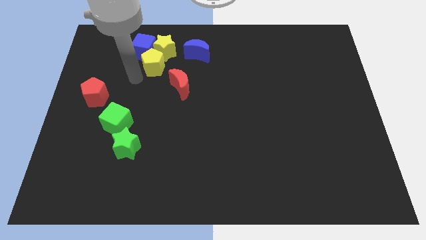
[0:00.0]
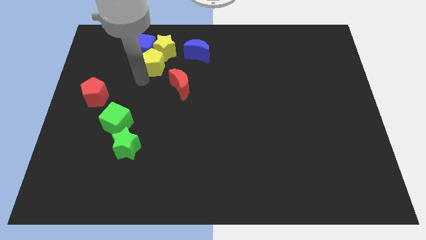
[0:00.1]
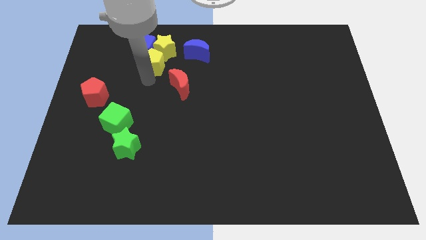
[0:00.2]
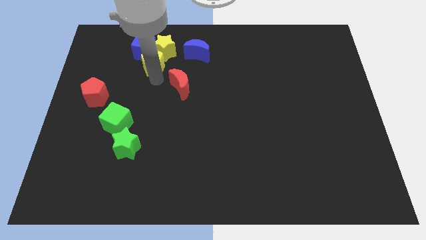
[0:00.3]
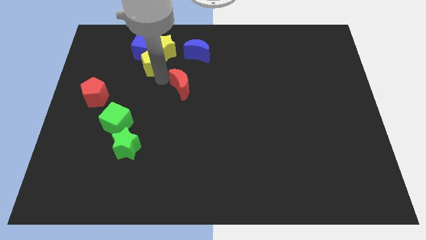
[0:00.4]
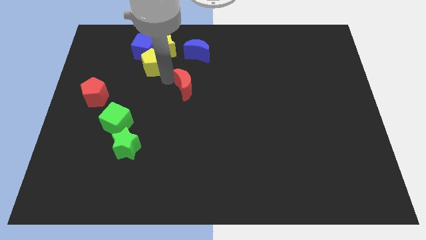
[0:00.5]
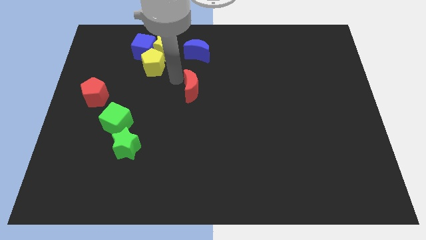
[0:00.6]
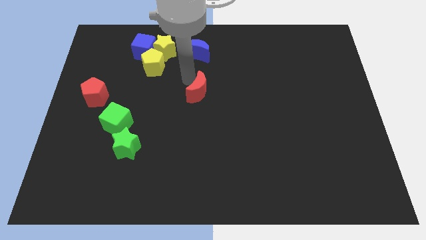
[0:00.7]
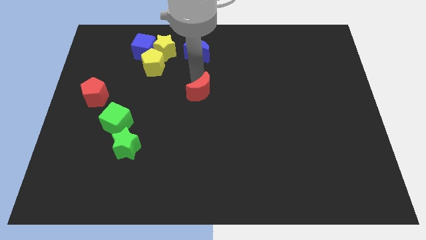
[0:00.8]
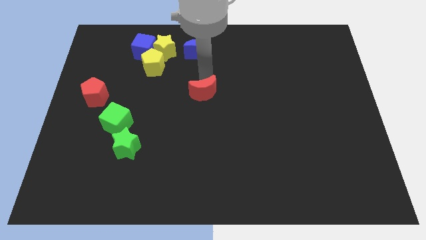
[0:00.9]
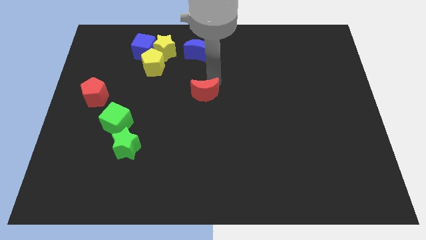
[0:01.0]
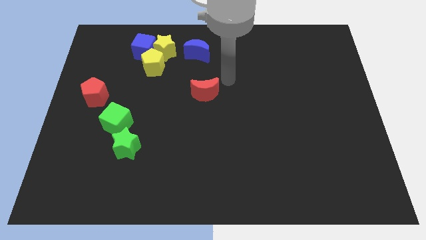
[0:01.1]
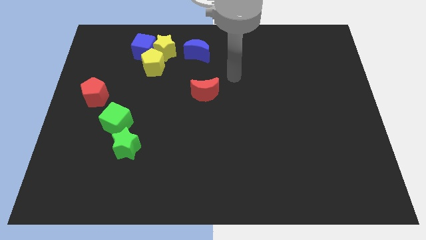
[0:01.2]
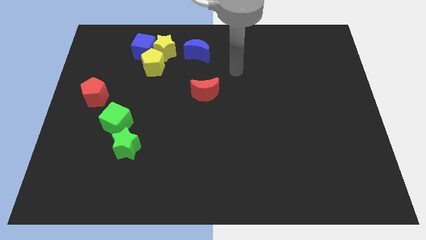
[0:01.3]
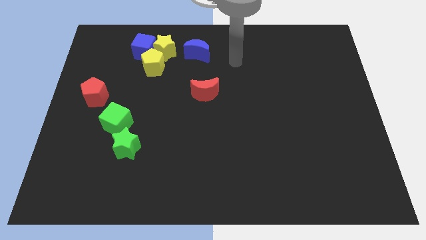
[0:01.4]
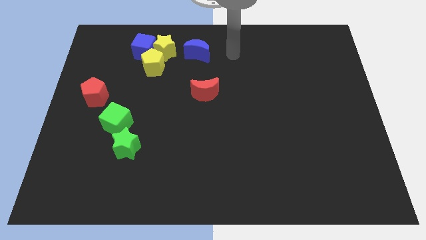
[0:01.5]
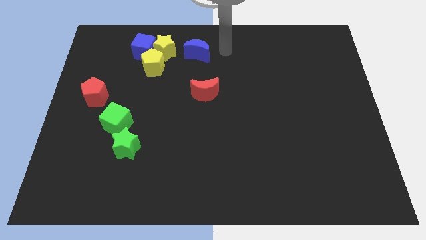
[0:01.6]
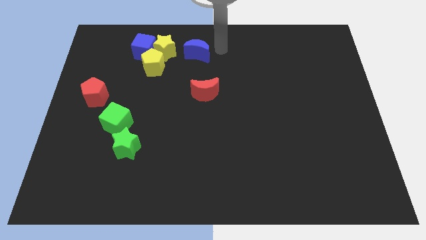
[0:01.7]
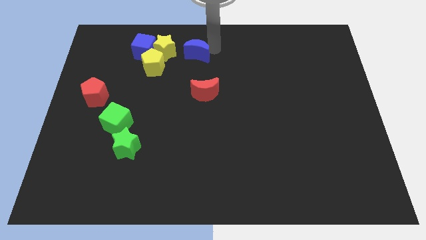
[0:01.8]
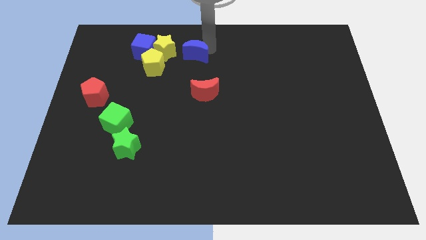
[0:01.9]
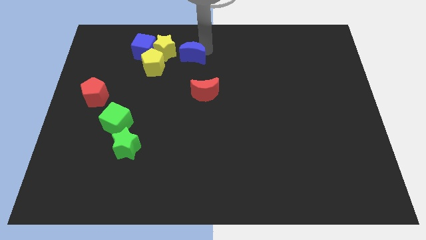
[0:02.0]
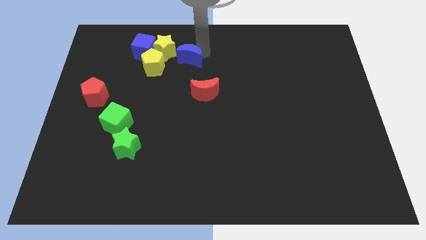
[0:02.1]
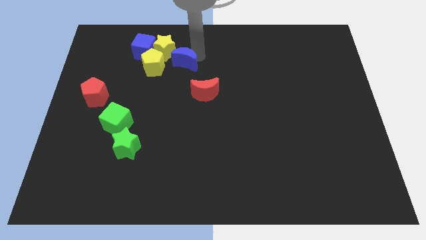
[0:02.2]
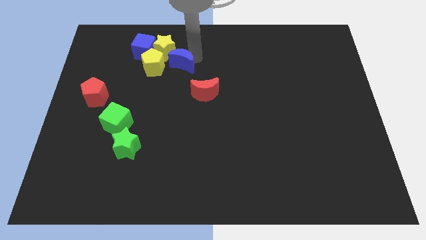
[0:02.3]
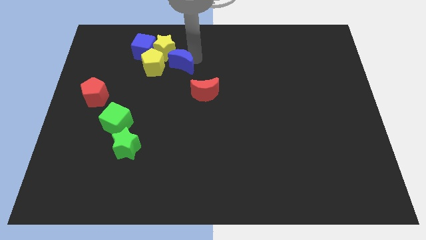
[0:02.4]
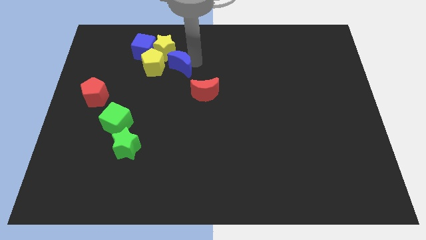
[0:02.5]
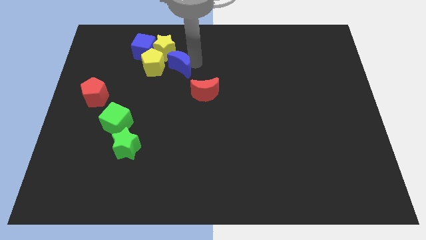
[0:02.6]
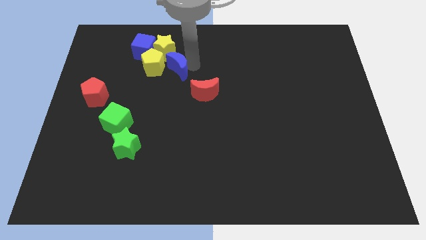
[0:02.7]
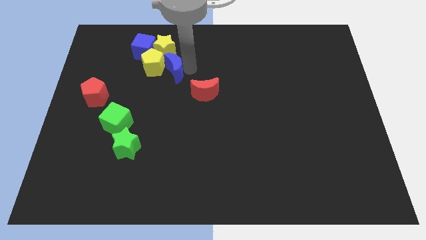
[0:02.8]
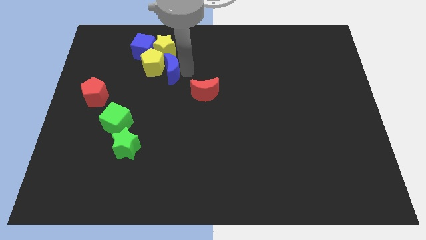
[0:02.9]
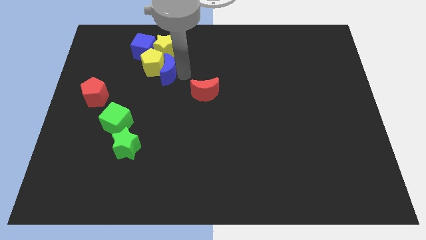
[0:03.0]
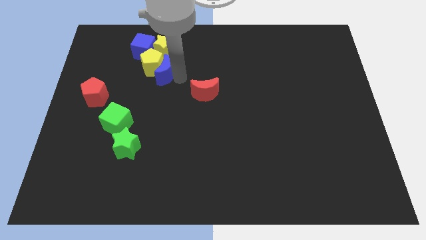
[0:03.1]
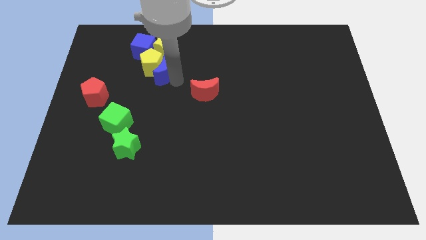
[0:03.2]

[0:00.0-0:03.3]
slide blue moon into the group of blocks

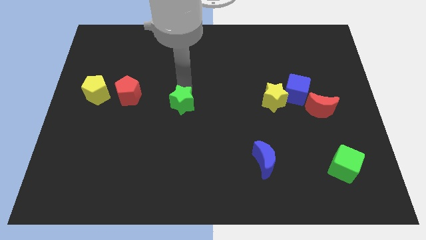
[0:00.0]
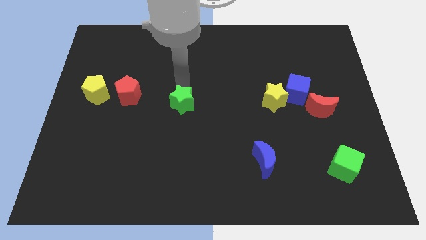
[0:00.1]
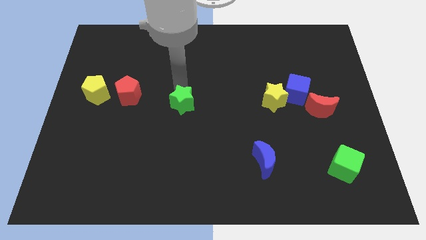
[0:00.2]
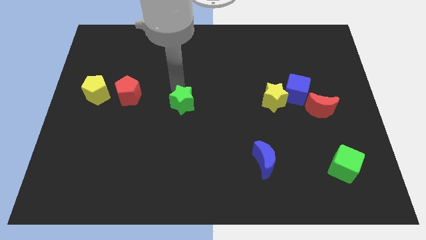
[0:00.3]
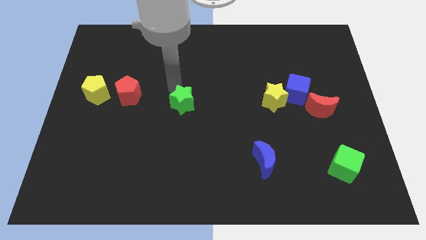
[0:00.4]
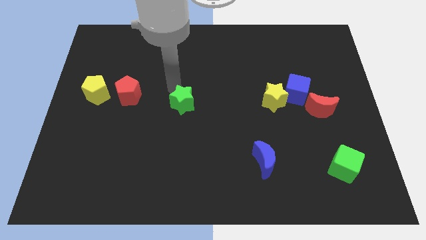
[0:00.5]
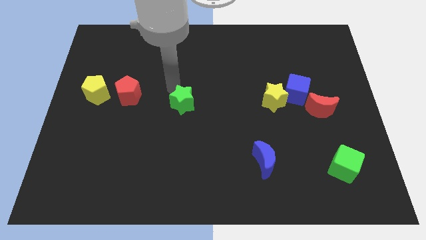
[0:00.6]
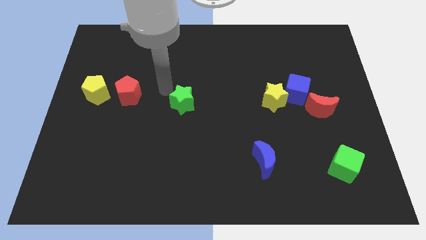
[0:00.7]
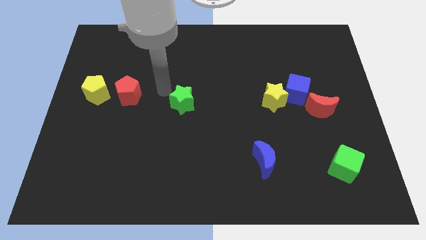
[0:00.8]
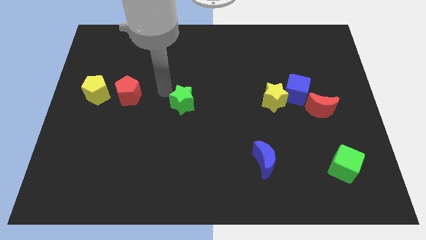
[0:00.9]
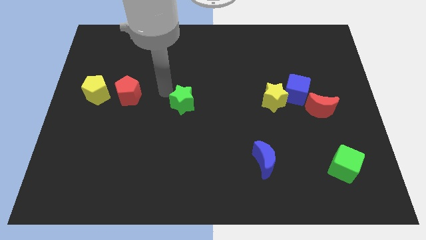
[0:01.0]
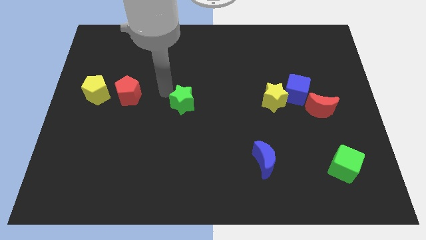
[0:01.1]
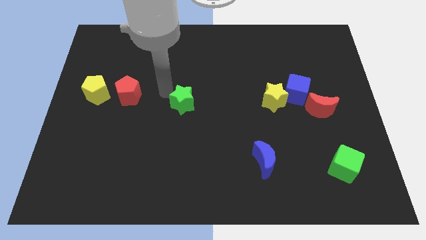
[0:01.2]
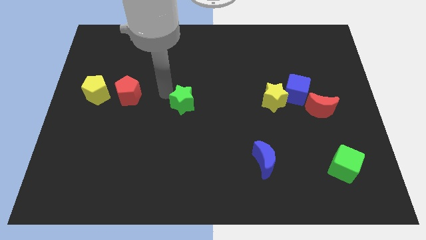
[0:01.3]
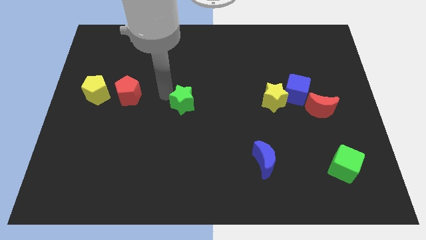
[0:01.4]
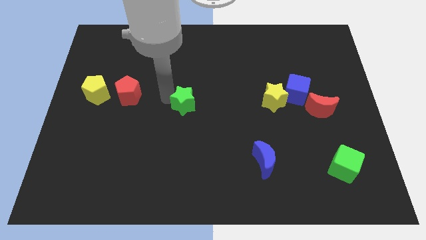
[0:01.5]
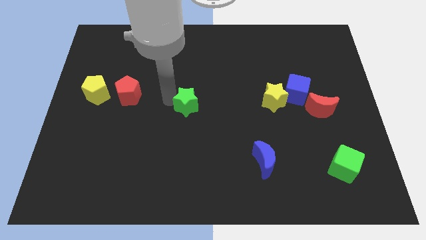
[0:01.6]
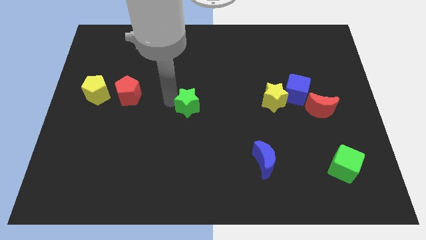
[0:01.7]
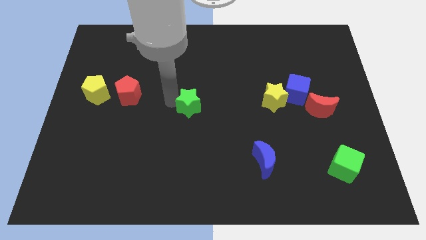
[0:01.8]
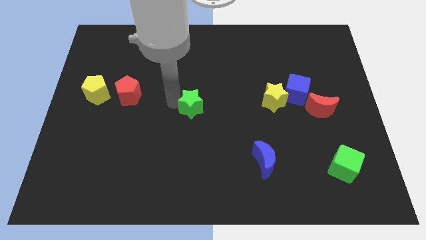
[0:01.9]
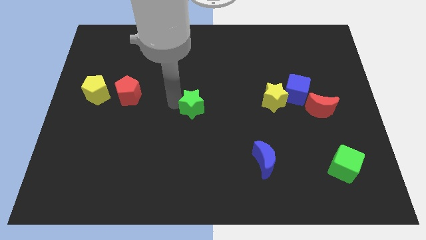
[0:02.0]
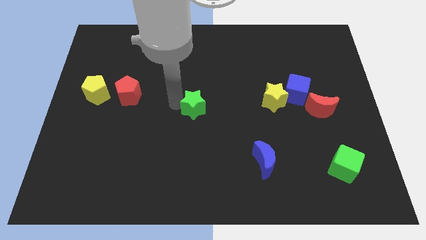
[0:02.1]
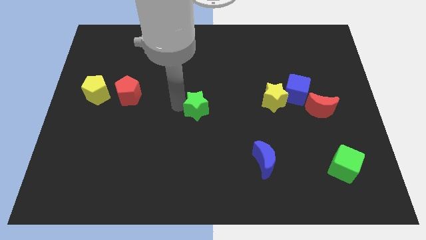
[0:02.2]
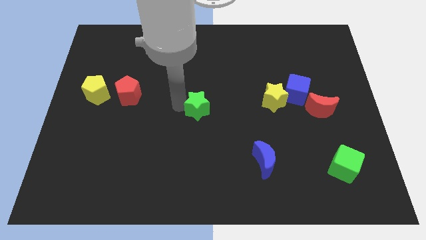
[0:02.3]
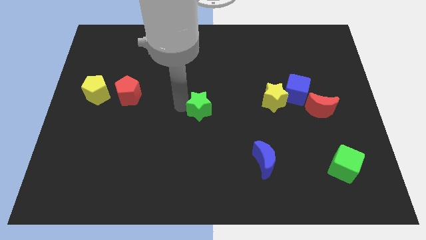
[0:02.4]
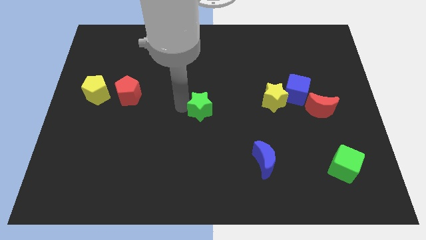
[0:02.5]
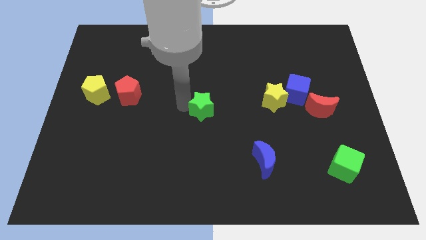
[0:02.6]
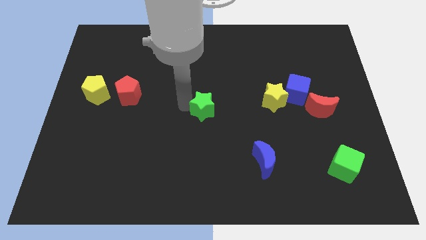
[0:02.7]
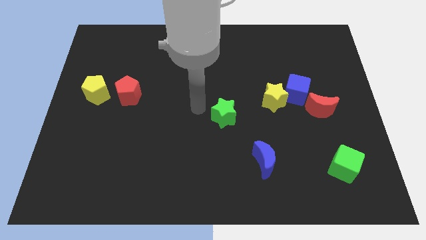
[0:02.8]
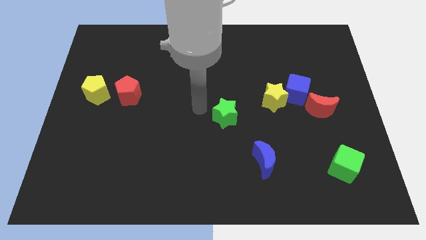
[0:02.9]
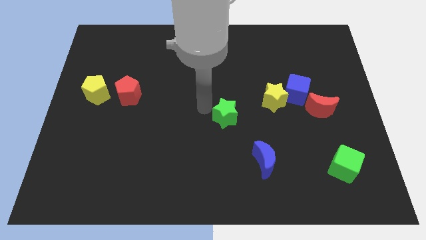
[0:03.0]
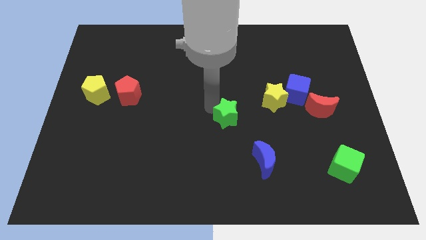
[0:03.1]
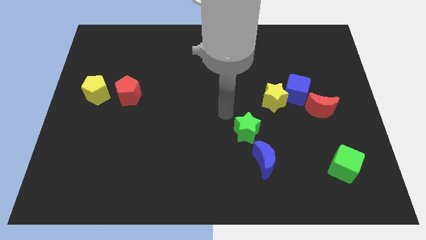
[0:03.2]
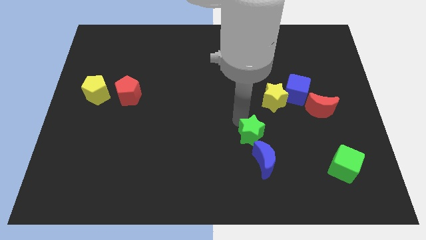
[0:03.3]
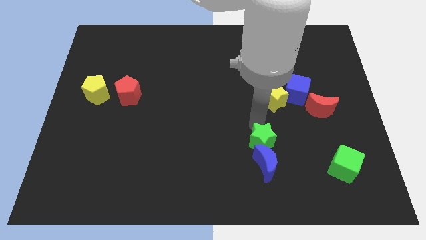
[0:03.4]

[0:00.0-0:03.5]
move the green star to the top of the blue crescent

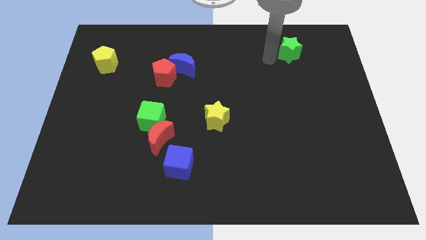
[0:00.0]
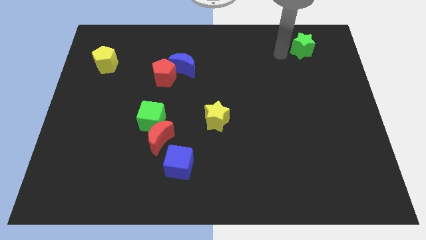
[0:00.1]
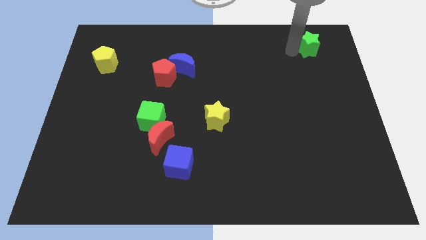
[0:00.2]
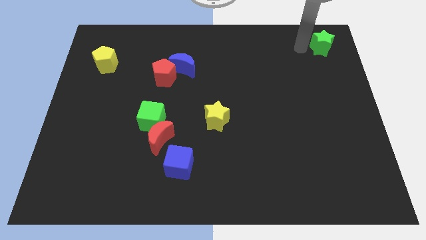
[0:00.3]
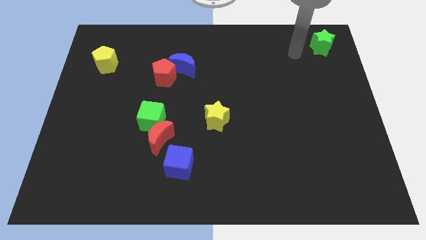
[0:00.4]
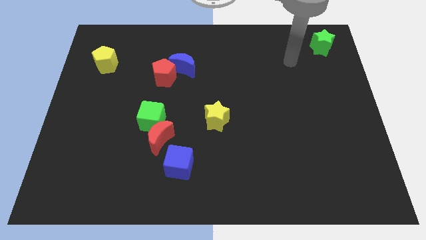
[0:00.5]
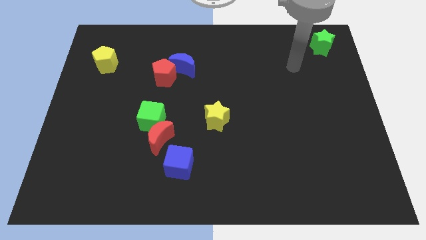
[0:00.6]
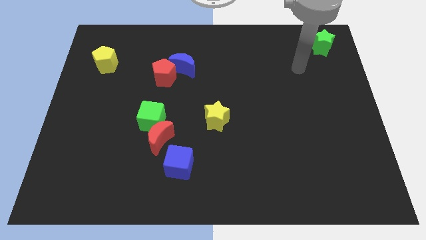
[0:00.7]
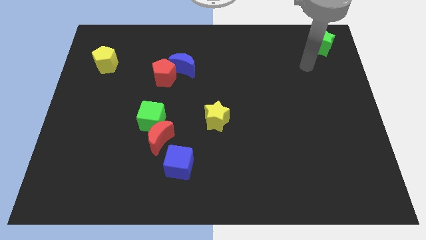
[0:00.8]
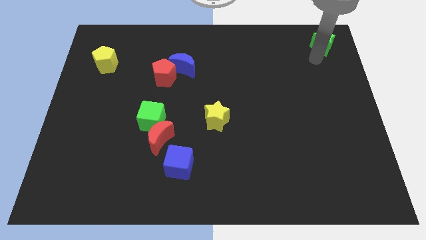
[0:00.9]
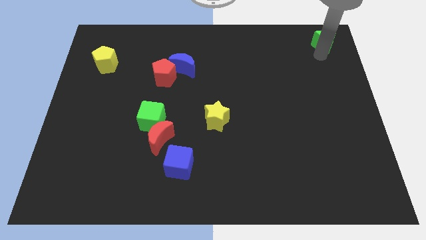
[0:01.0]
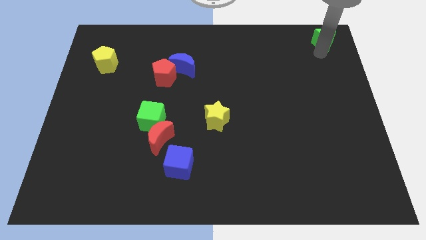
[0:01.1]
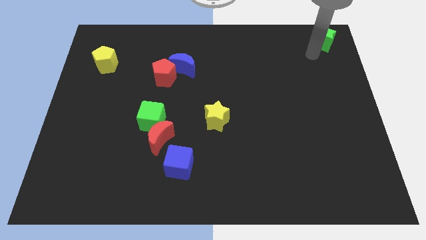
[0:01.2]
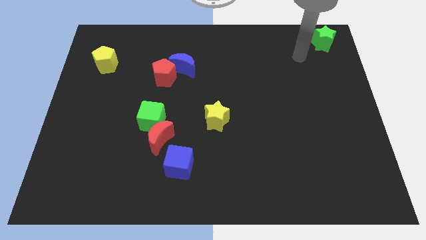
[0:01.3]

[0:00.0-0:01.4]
move the green star to the top right of the board

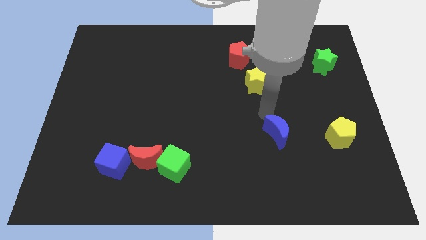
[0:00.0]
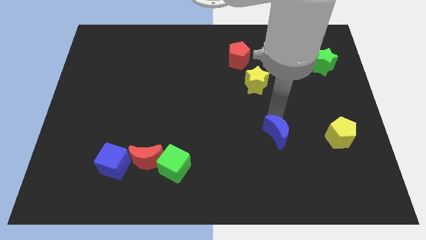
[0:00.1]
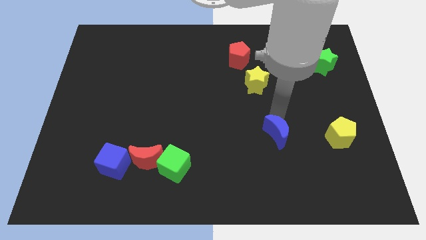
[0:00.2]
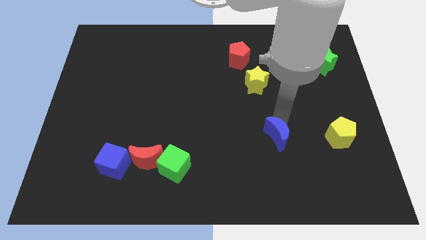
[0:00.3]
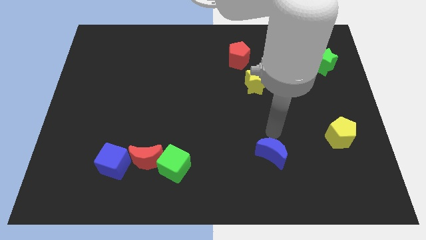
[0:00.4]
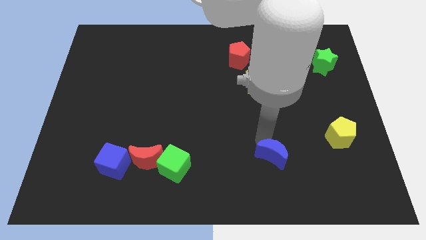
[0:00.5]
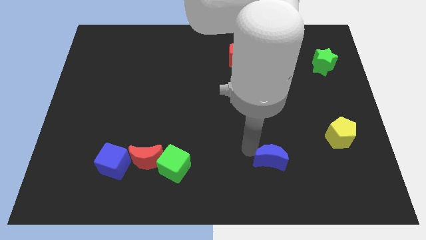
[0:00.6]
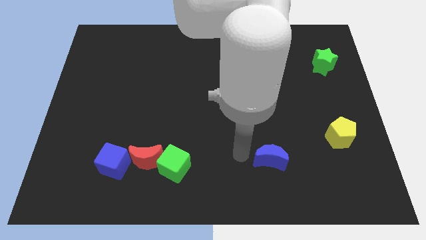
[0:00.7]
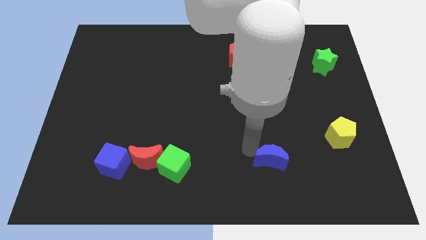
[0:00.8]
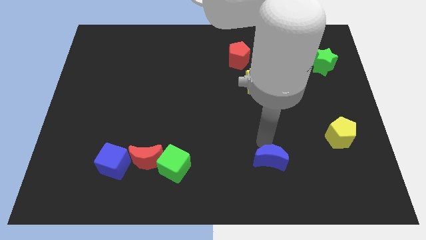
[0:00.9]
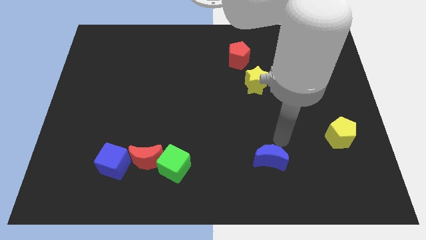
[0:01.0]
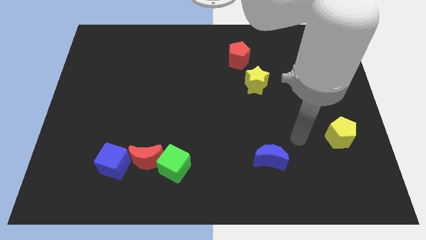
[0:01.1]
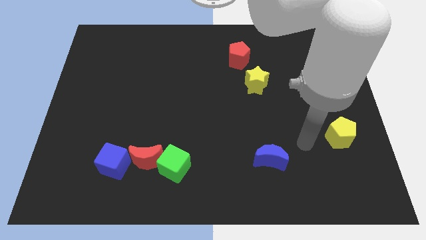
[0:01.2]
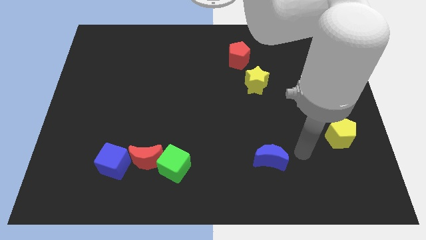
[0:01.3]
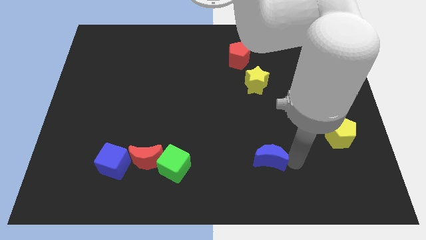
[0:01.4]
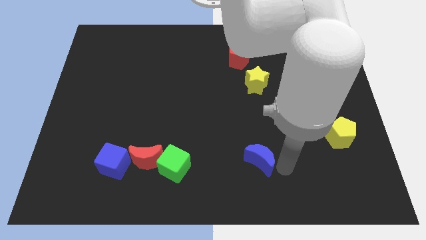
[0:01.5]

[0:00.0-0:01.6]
place the blue moon to the right of the green cube
